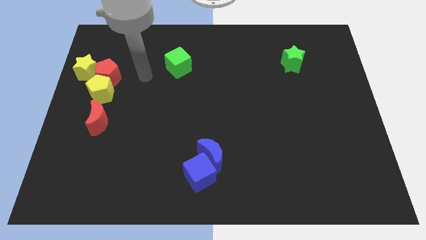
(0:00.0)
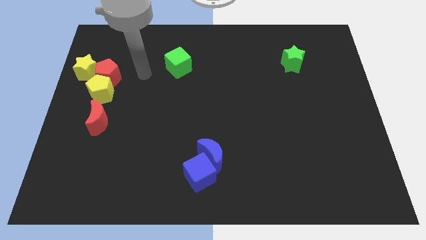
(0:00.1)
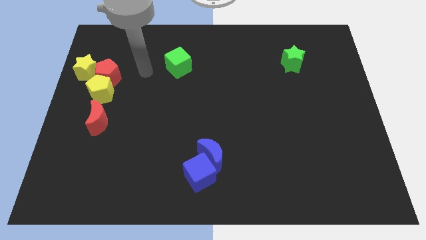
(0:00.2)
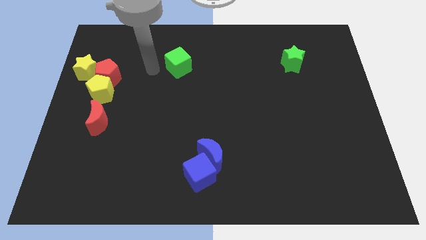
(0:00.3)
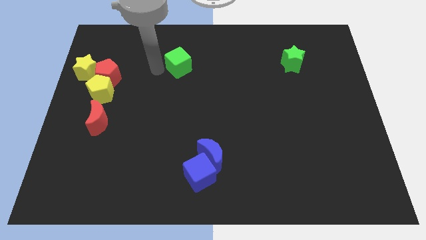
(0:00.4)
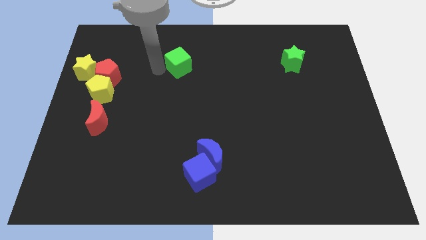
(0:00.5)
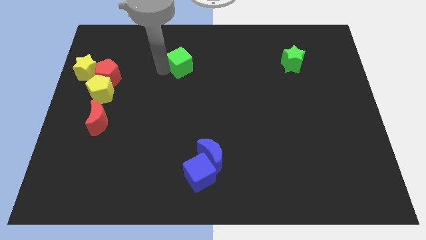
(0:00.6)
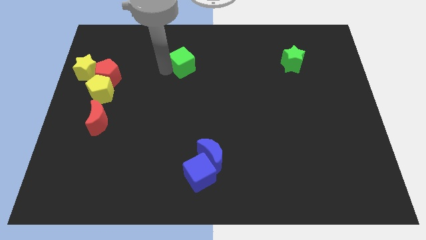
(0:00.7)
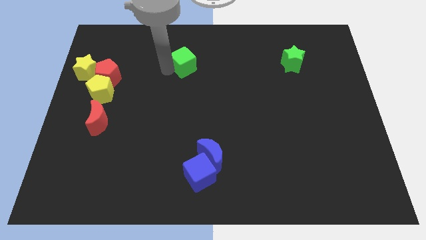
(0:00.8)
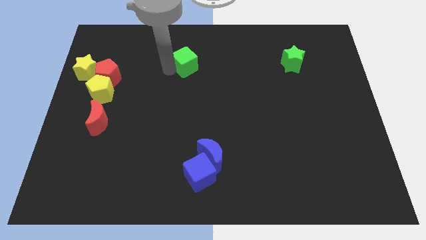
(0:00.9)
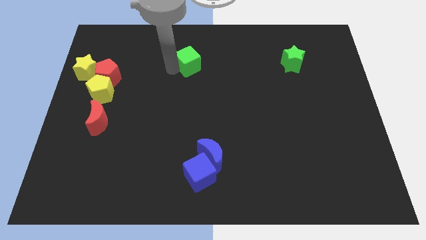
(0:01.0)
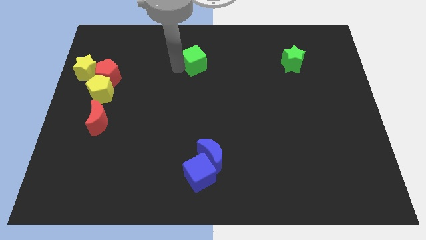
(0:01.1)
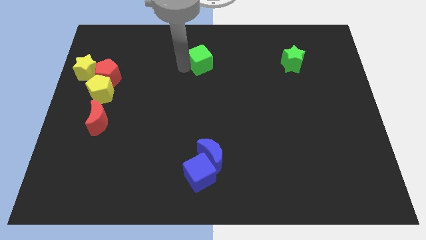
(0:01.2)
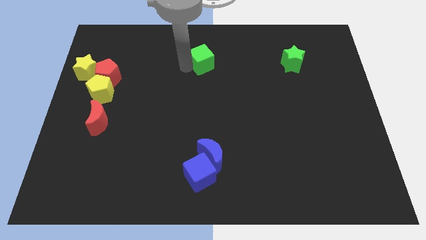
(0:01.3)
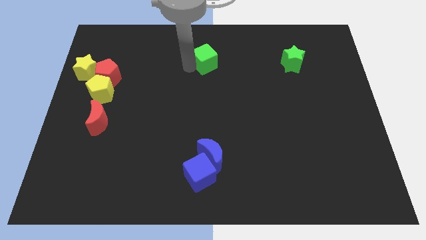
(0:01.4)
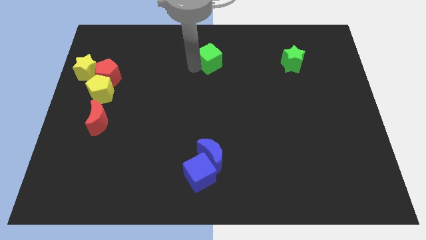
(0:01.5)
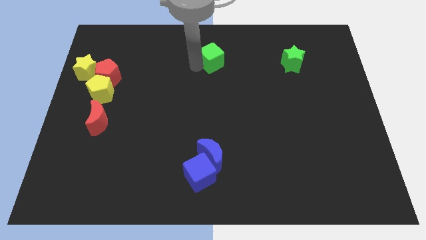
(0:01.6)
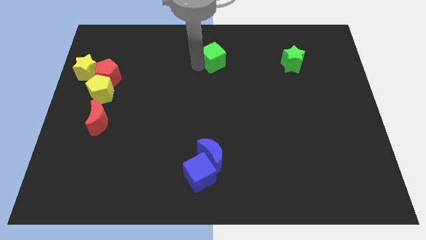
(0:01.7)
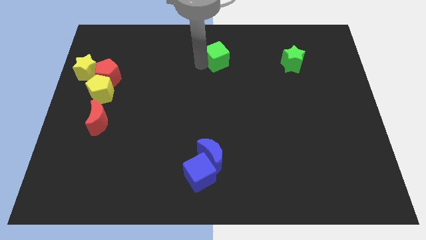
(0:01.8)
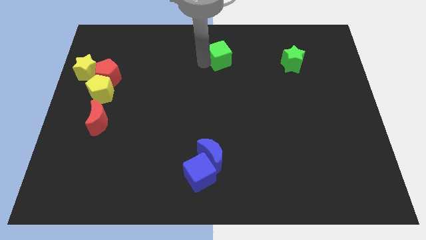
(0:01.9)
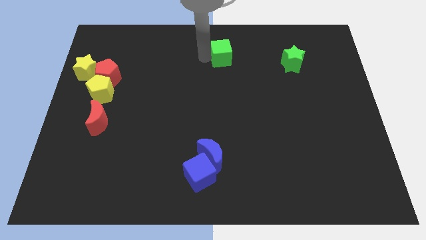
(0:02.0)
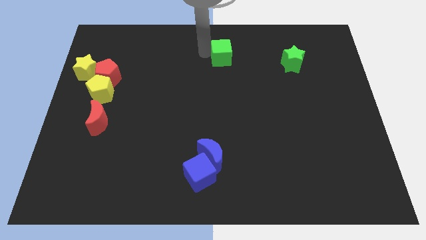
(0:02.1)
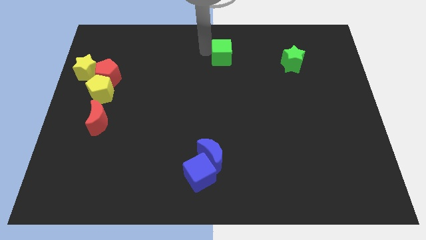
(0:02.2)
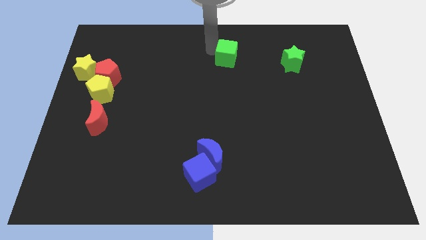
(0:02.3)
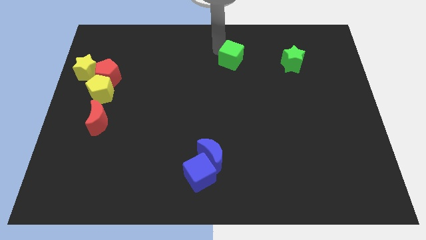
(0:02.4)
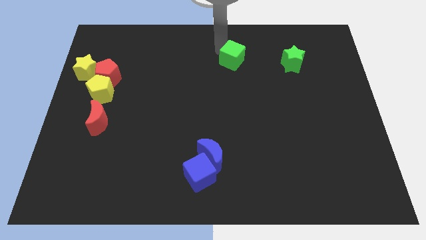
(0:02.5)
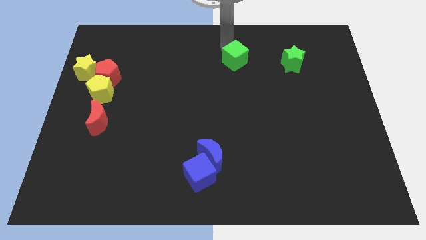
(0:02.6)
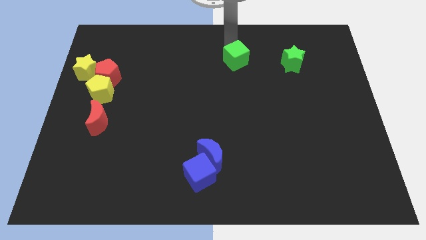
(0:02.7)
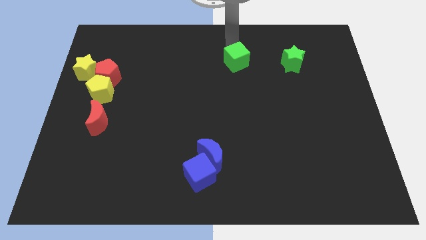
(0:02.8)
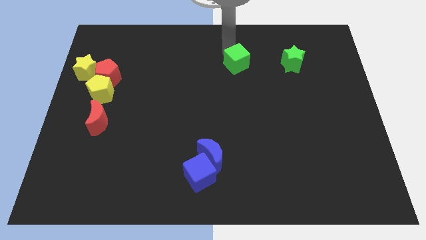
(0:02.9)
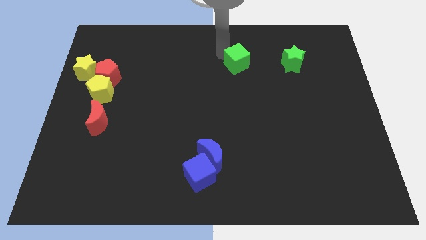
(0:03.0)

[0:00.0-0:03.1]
slide green cube parallel to green star

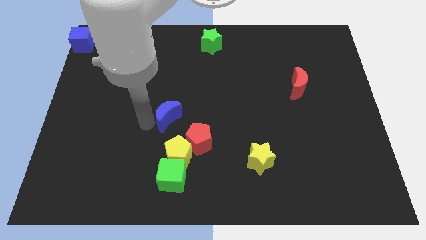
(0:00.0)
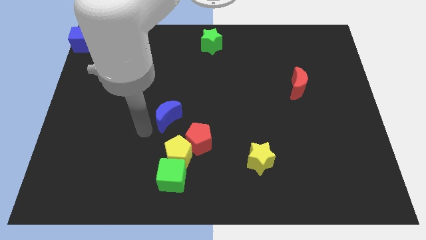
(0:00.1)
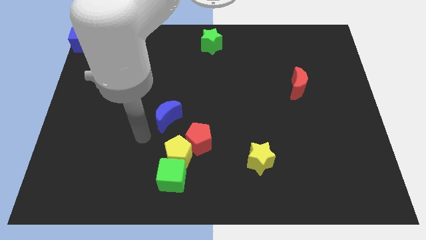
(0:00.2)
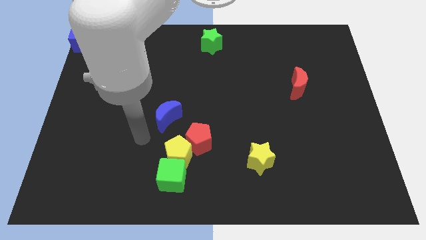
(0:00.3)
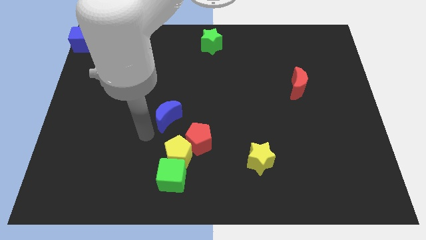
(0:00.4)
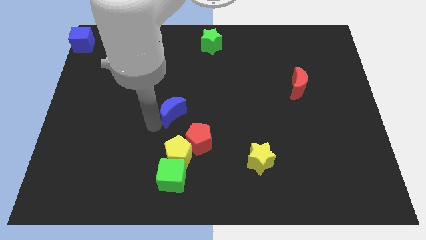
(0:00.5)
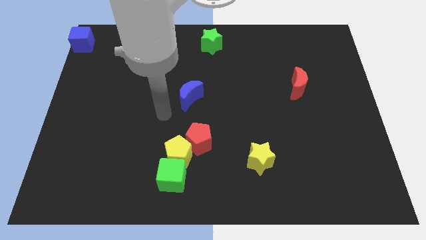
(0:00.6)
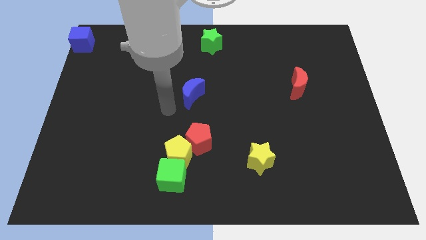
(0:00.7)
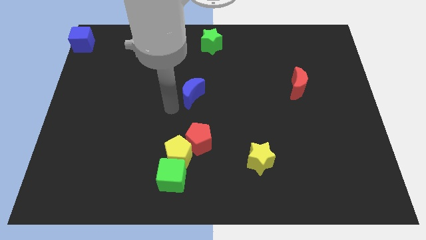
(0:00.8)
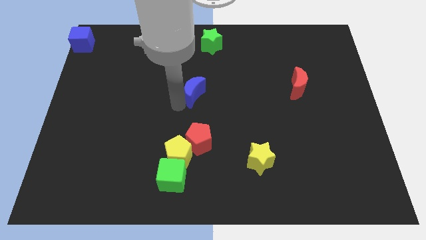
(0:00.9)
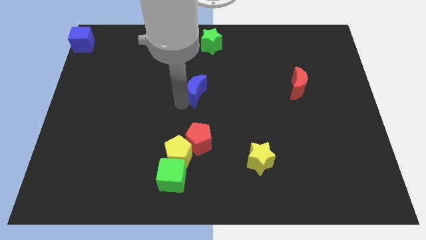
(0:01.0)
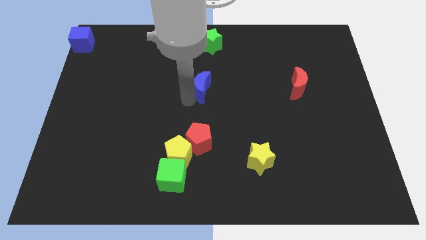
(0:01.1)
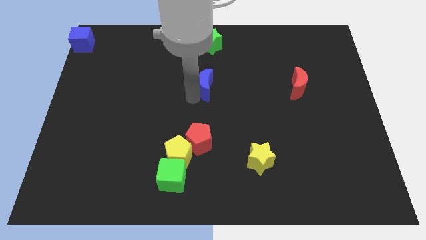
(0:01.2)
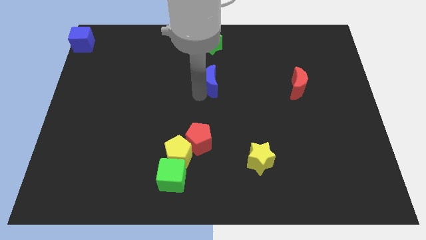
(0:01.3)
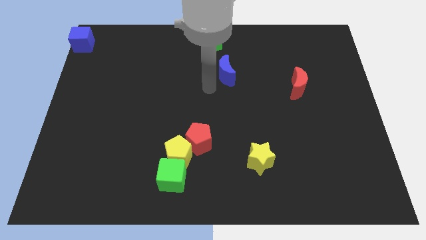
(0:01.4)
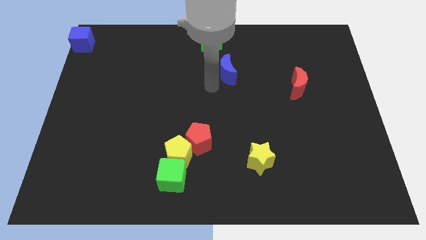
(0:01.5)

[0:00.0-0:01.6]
place the blue moon left to the red moon

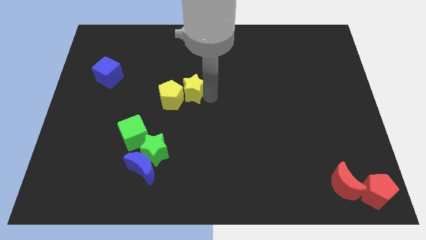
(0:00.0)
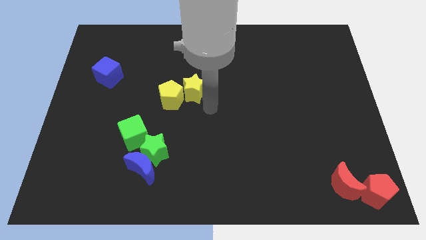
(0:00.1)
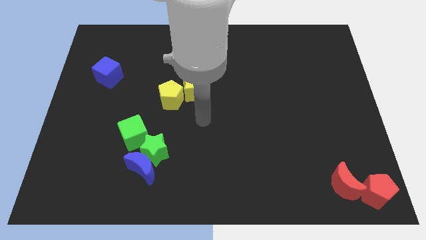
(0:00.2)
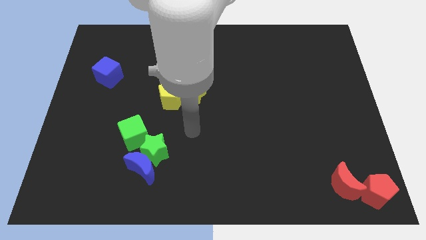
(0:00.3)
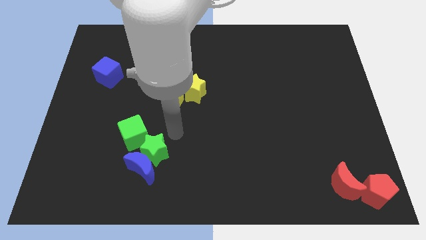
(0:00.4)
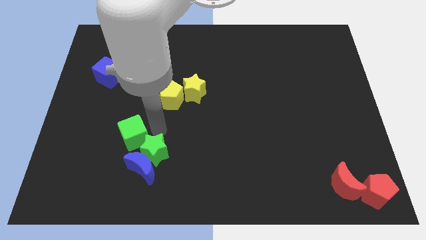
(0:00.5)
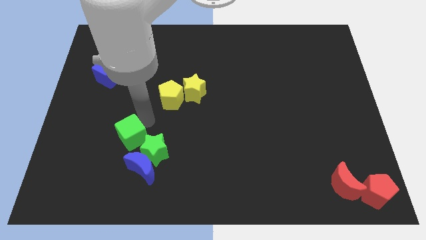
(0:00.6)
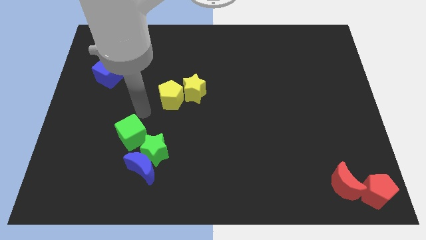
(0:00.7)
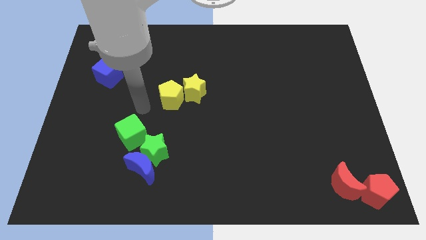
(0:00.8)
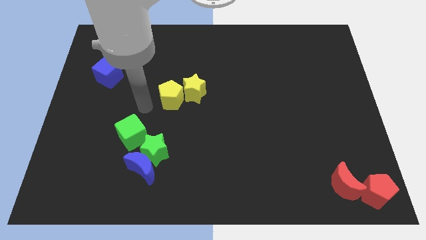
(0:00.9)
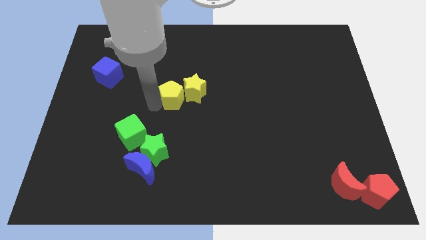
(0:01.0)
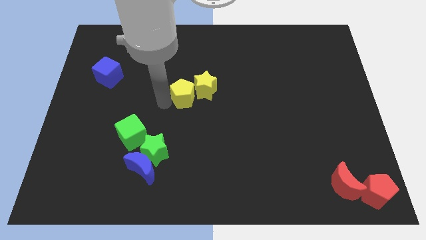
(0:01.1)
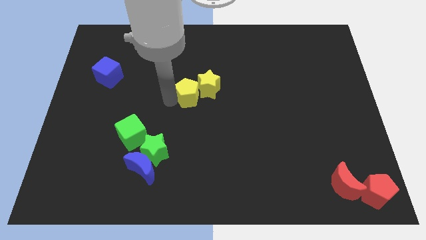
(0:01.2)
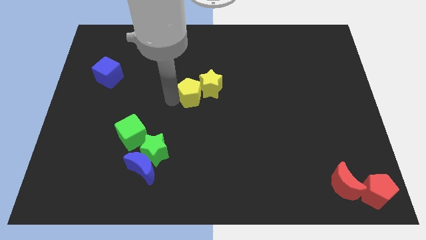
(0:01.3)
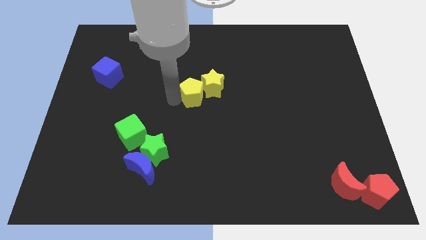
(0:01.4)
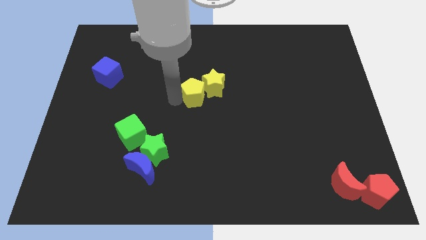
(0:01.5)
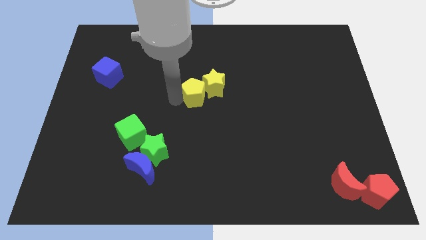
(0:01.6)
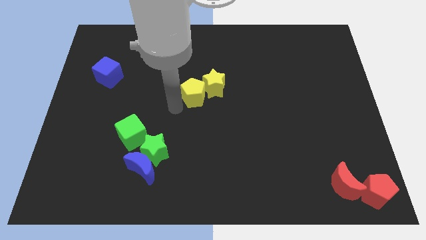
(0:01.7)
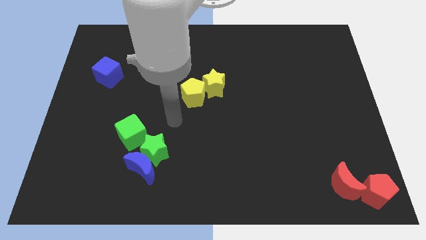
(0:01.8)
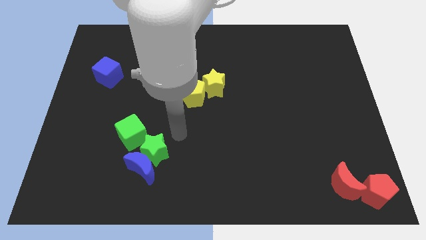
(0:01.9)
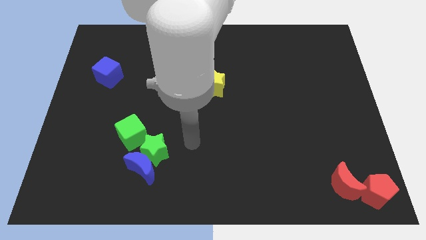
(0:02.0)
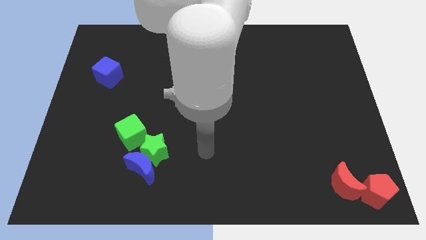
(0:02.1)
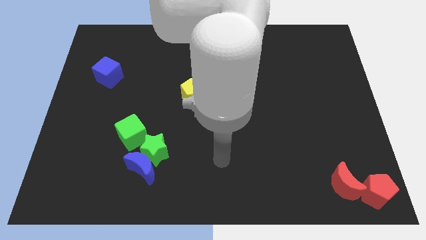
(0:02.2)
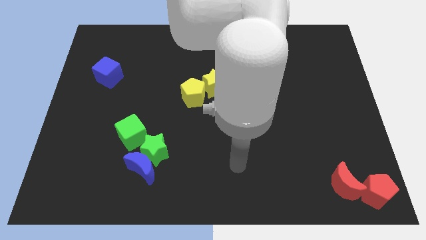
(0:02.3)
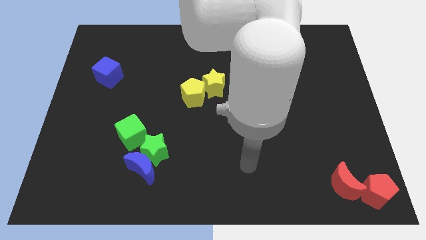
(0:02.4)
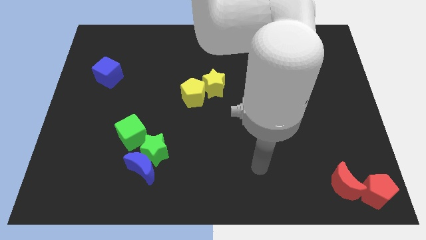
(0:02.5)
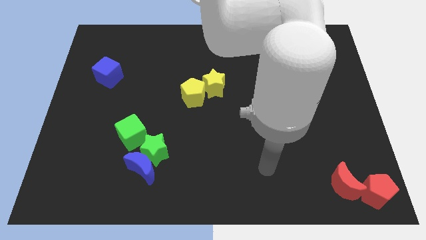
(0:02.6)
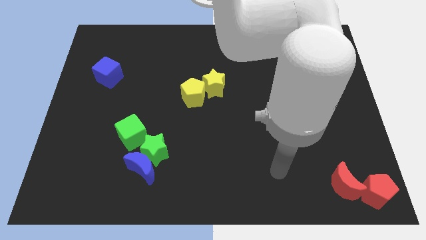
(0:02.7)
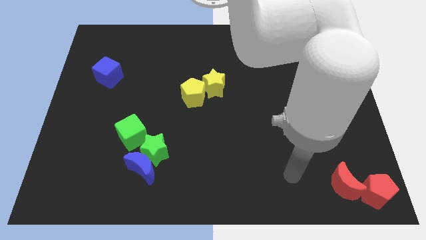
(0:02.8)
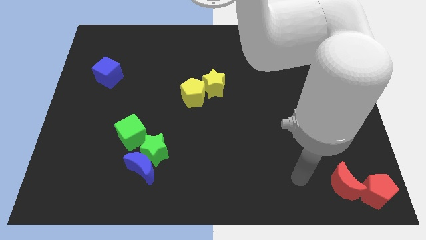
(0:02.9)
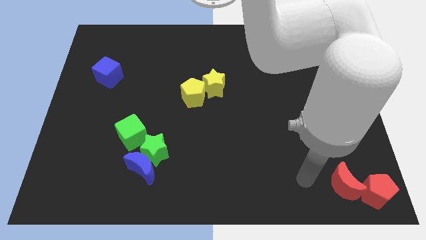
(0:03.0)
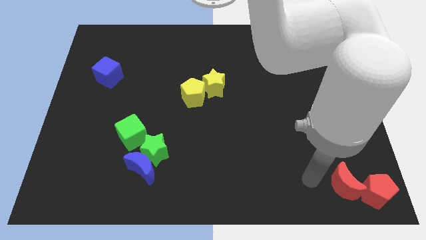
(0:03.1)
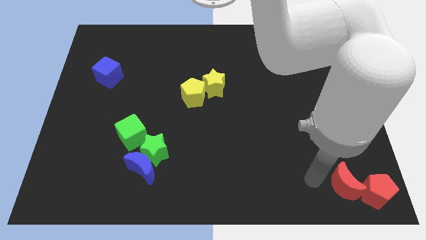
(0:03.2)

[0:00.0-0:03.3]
move both the yellow blocks diagonally on the top right side of the green cube

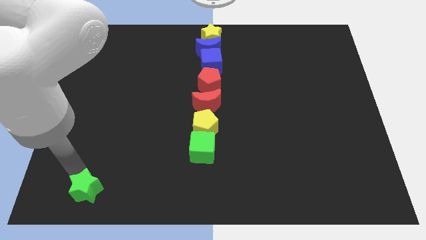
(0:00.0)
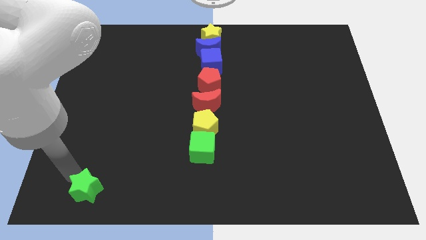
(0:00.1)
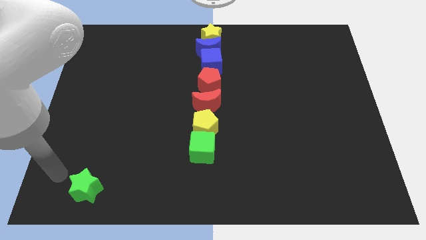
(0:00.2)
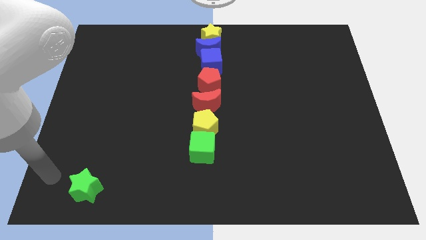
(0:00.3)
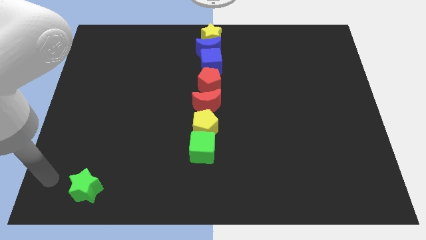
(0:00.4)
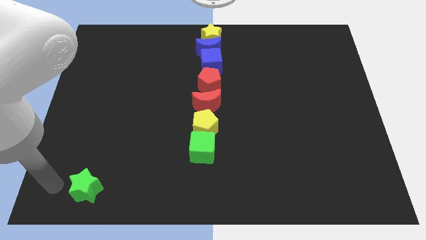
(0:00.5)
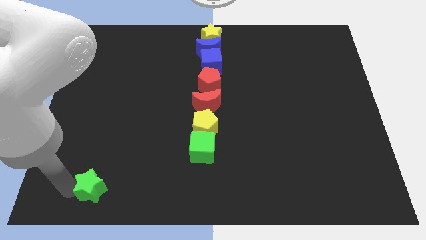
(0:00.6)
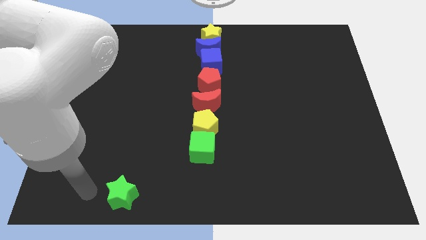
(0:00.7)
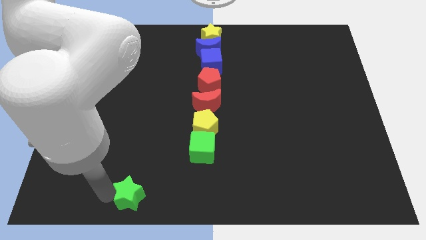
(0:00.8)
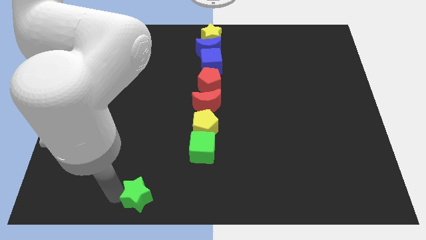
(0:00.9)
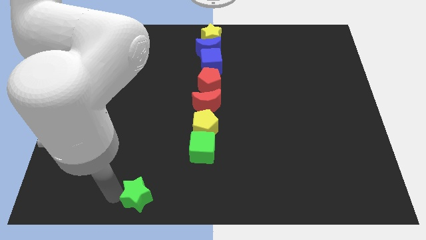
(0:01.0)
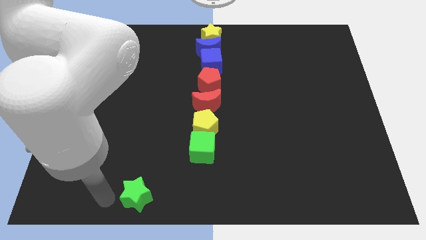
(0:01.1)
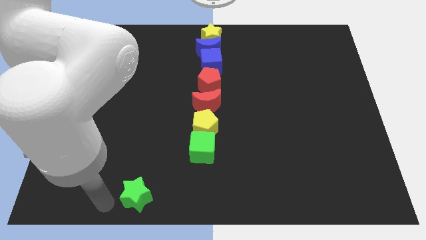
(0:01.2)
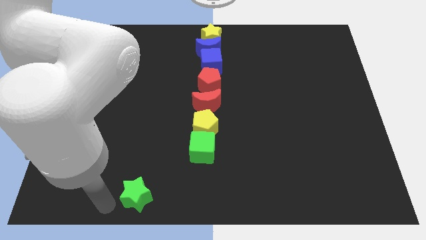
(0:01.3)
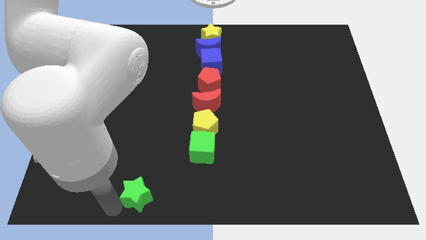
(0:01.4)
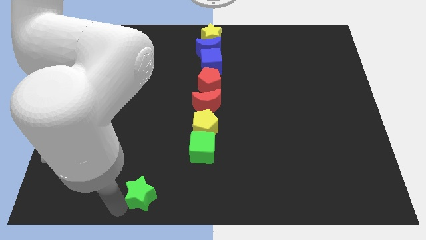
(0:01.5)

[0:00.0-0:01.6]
move the green star towards right a bit
